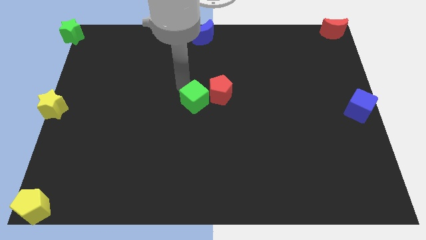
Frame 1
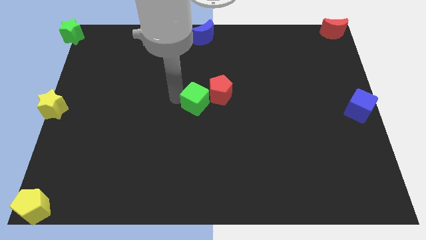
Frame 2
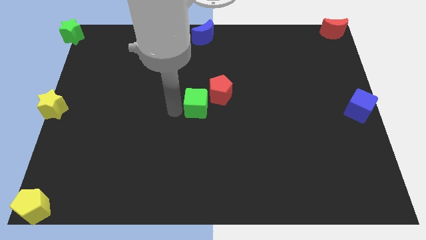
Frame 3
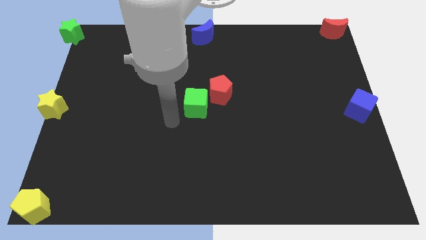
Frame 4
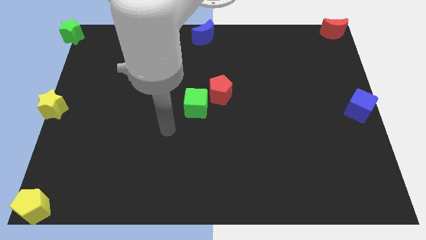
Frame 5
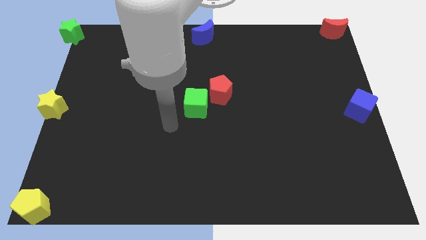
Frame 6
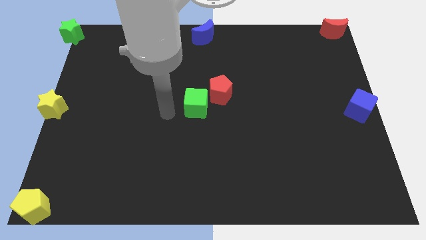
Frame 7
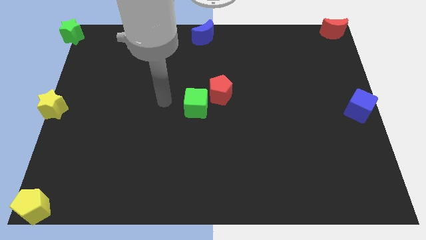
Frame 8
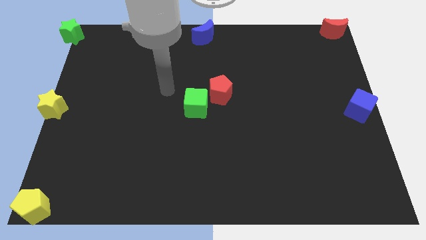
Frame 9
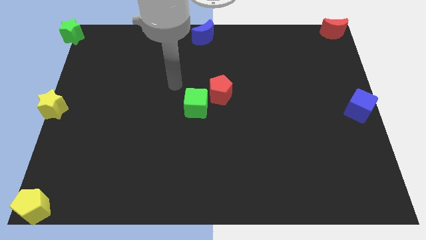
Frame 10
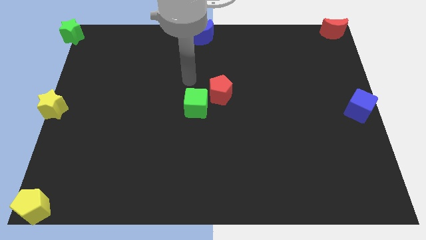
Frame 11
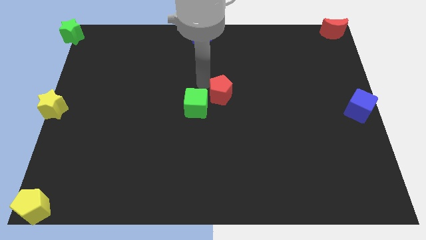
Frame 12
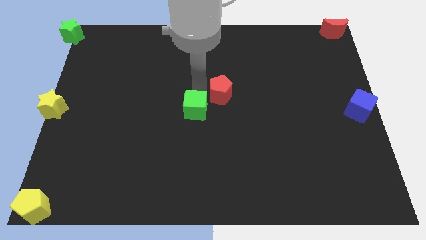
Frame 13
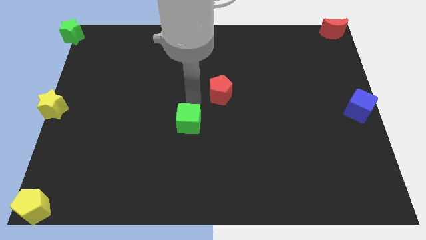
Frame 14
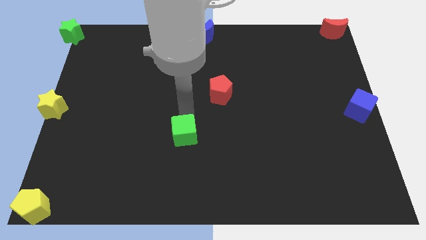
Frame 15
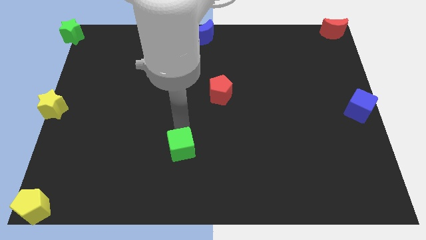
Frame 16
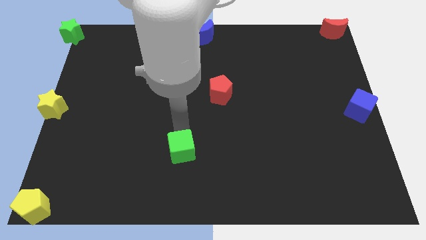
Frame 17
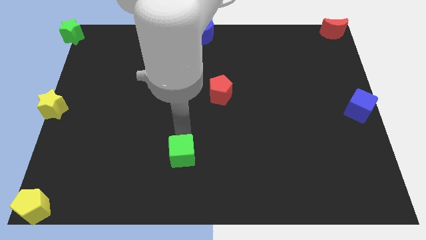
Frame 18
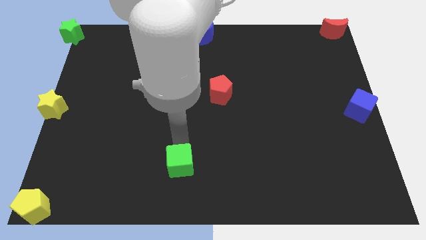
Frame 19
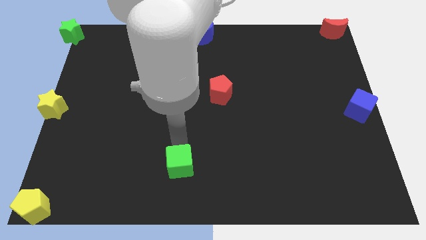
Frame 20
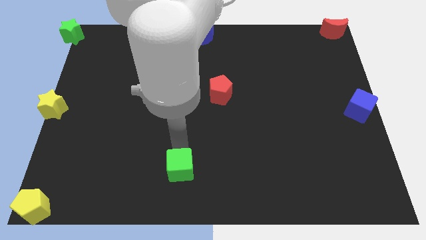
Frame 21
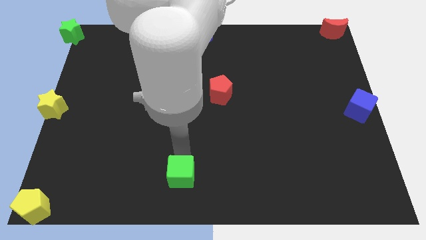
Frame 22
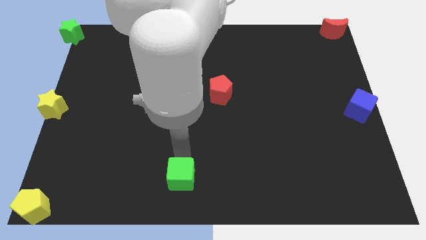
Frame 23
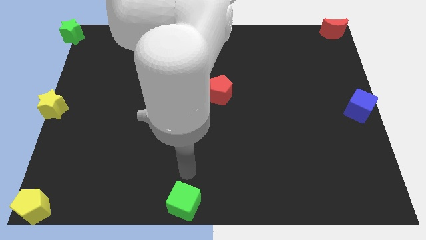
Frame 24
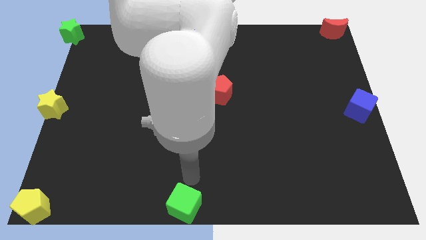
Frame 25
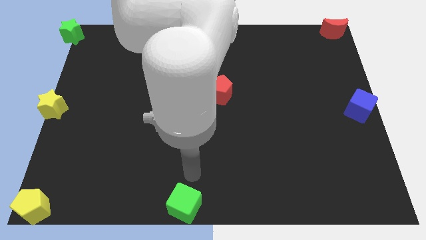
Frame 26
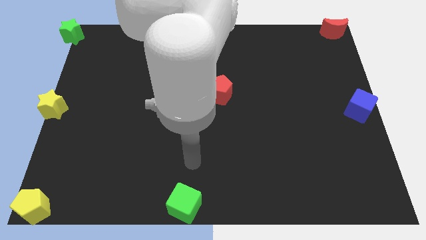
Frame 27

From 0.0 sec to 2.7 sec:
push the green cube to the bottom center

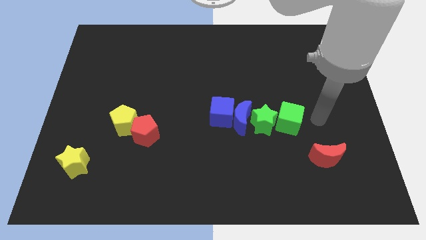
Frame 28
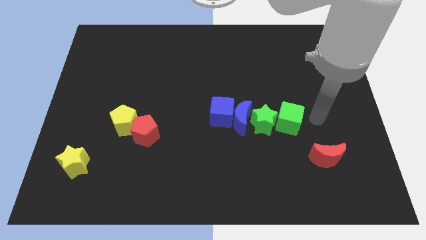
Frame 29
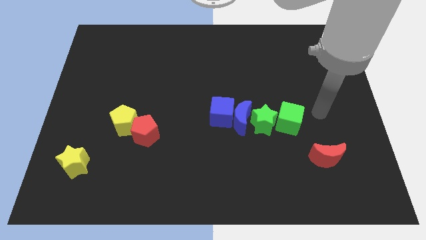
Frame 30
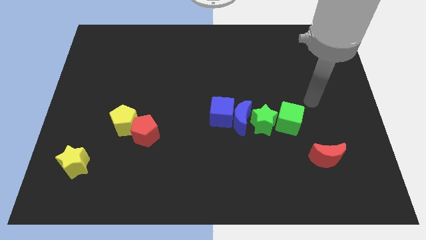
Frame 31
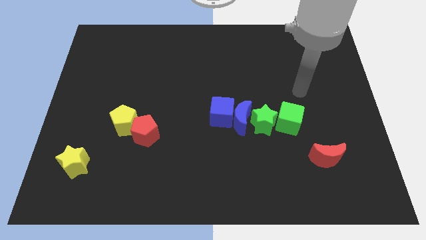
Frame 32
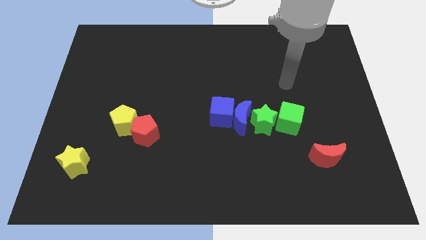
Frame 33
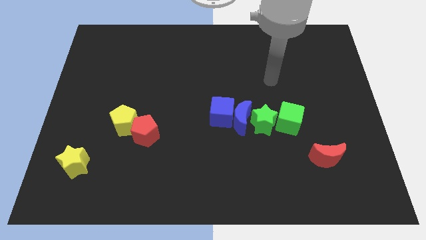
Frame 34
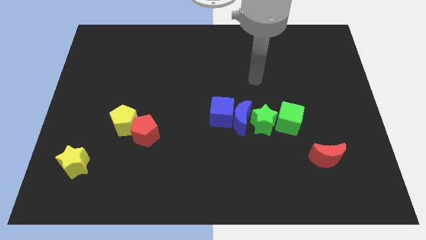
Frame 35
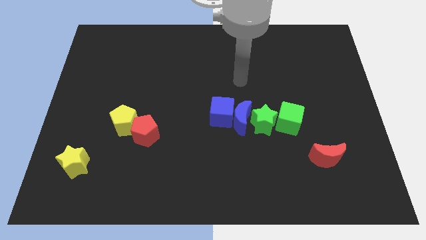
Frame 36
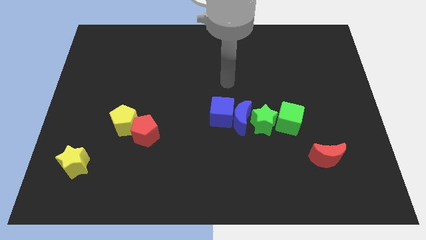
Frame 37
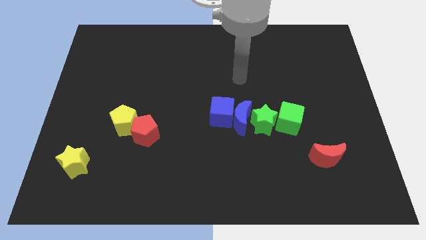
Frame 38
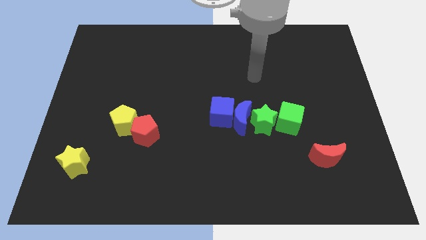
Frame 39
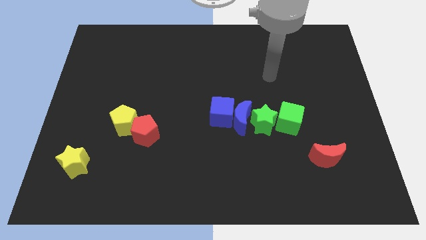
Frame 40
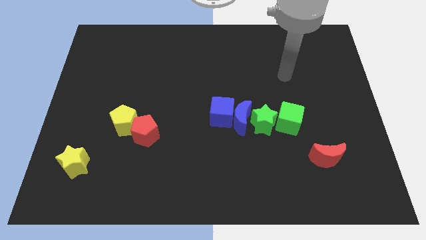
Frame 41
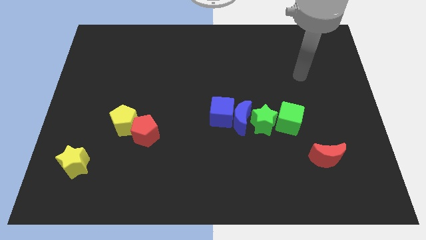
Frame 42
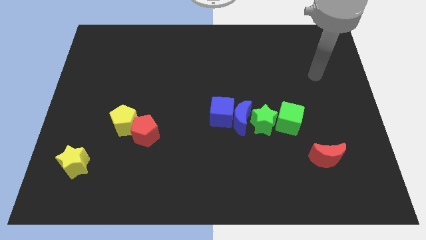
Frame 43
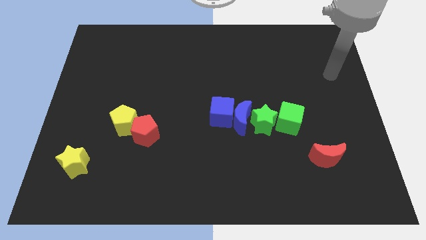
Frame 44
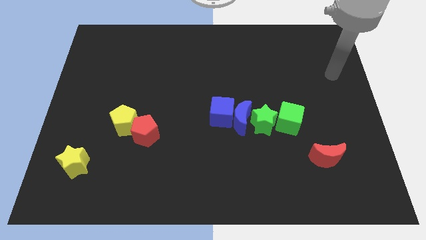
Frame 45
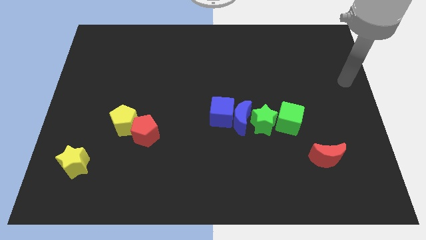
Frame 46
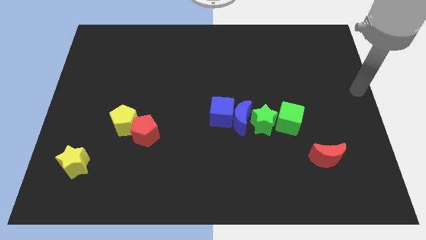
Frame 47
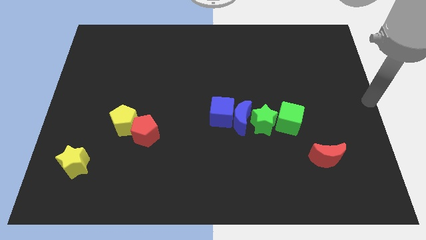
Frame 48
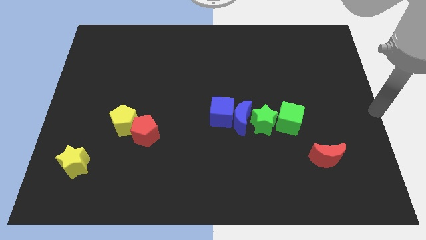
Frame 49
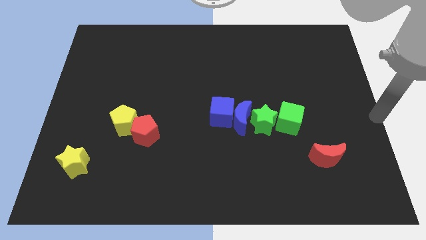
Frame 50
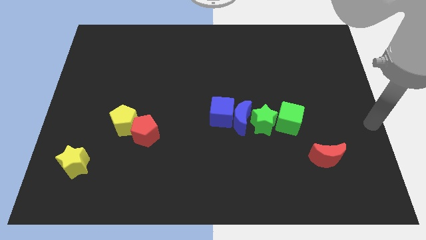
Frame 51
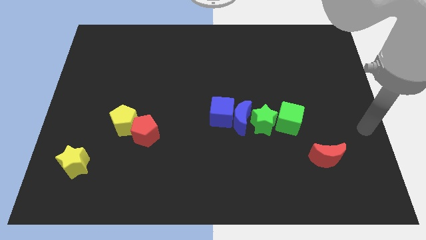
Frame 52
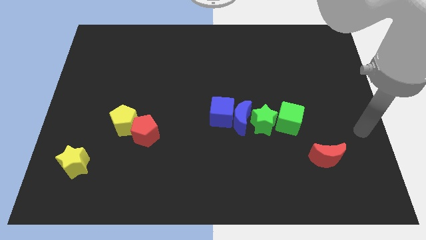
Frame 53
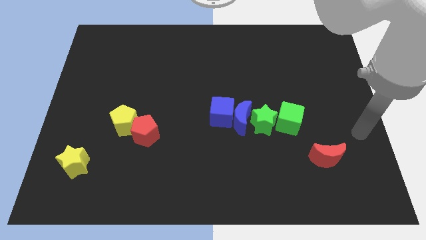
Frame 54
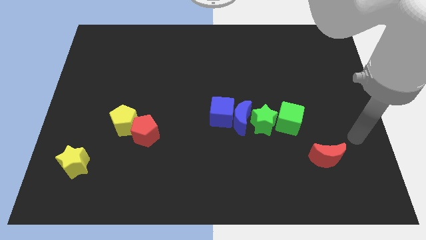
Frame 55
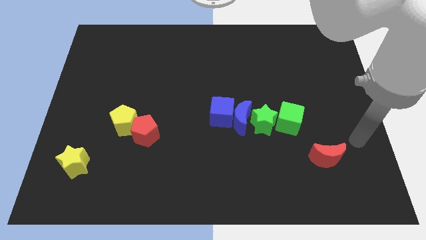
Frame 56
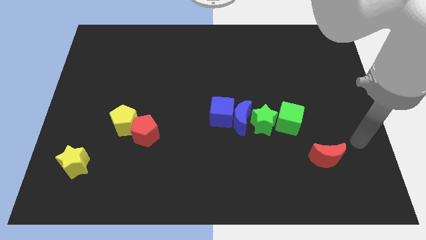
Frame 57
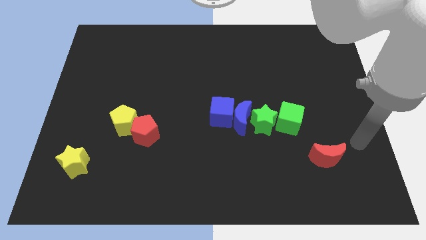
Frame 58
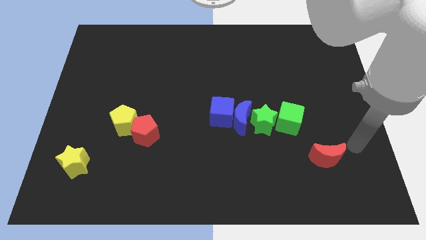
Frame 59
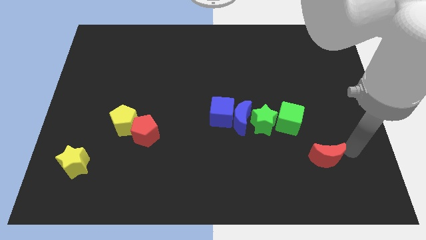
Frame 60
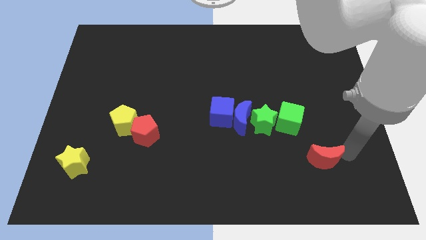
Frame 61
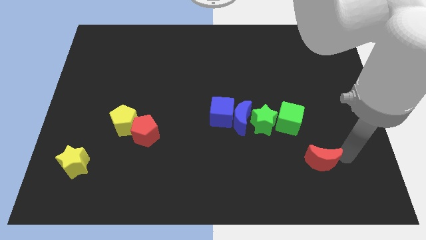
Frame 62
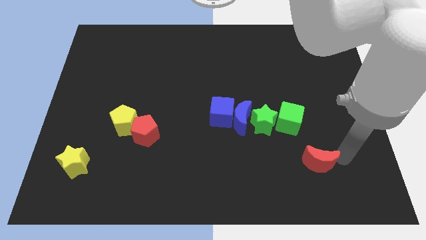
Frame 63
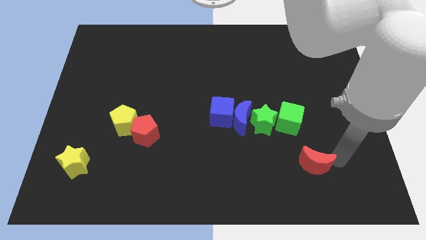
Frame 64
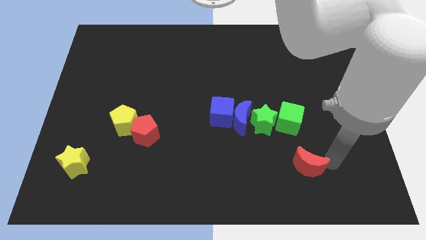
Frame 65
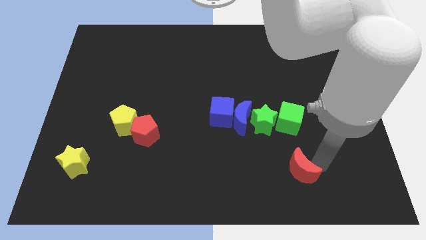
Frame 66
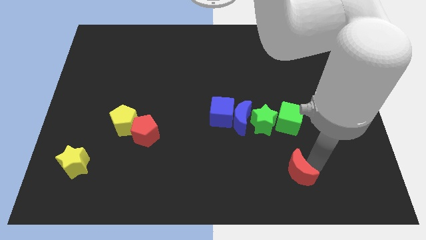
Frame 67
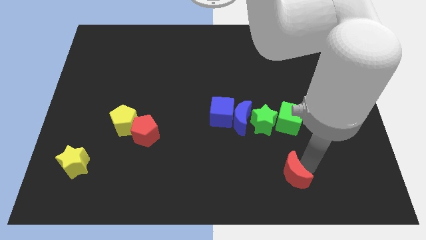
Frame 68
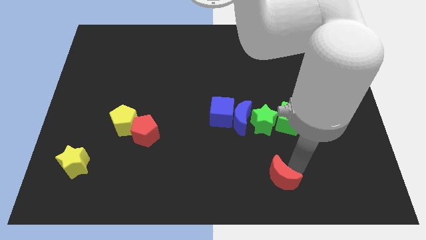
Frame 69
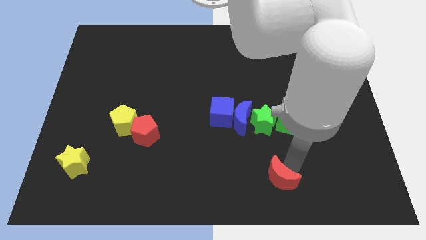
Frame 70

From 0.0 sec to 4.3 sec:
place the red moon to the bottom side of the green cube

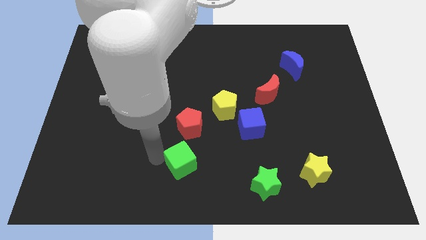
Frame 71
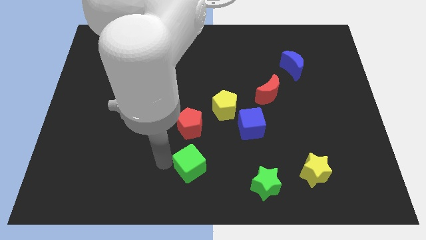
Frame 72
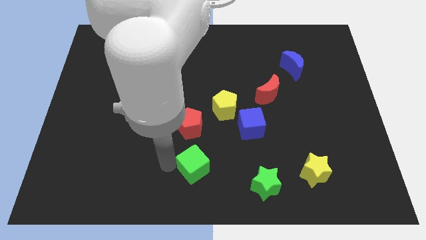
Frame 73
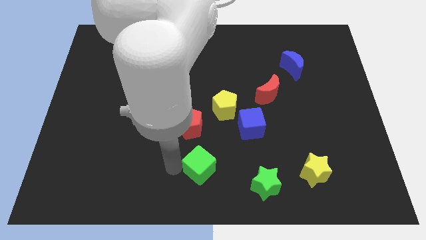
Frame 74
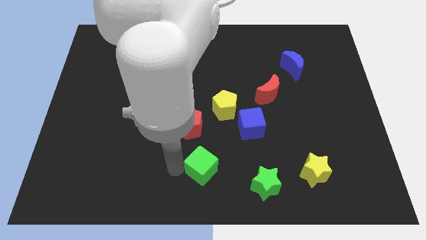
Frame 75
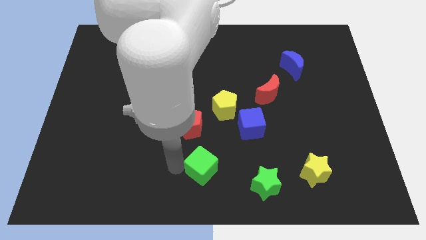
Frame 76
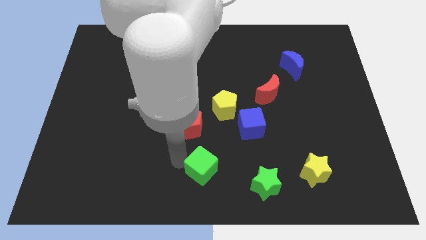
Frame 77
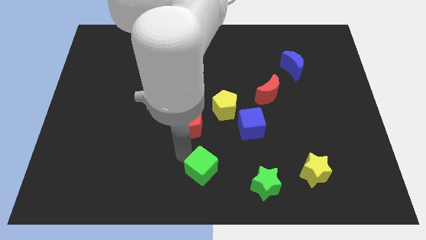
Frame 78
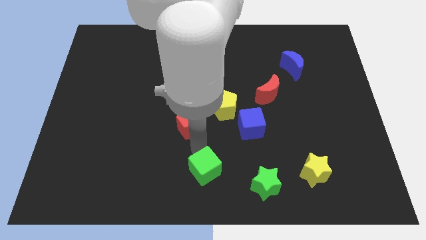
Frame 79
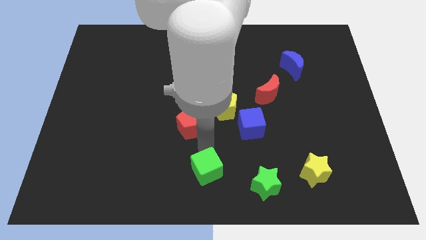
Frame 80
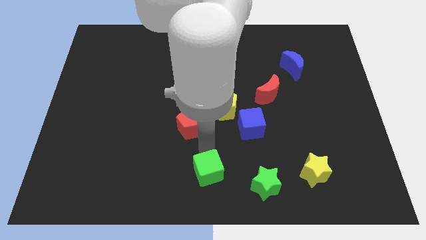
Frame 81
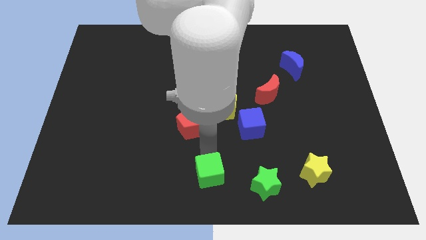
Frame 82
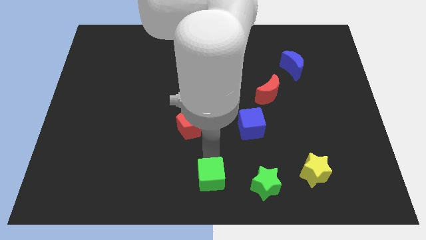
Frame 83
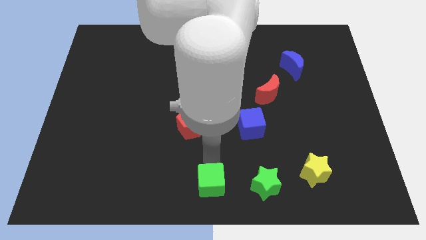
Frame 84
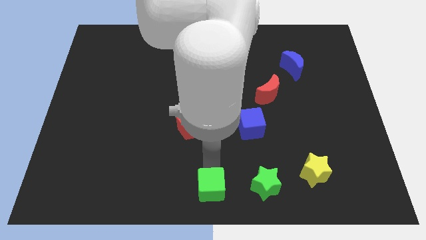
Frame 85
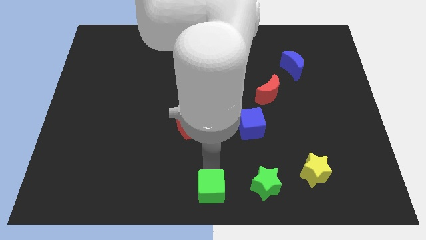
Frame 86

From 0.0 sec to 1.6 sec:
place the green cube left to the green star

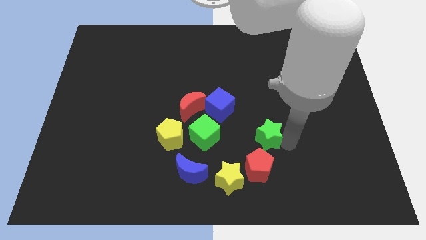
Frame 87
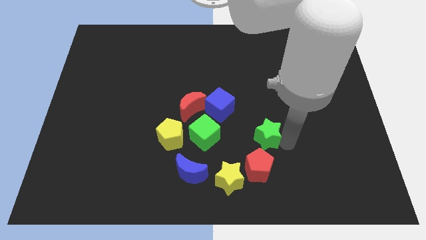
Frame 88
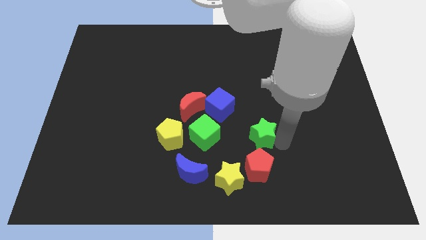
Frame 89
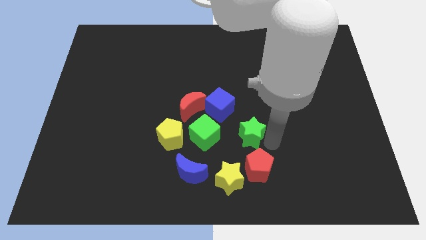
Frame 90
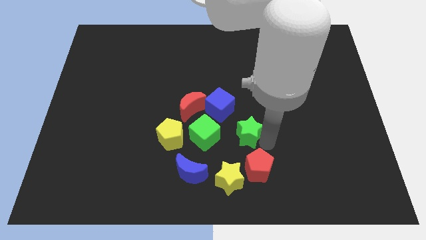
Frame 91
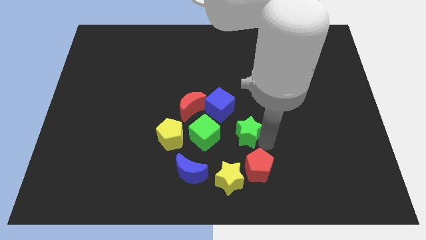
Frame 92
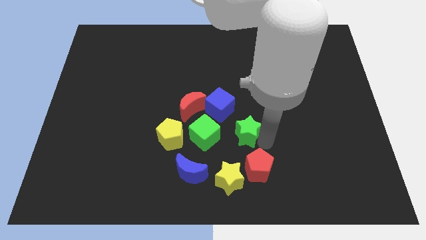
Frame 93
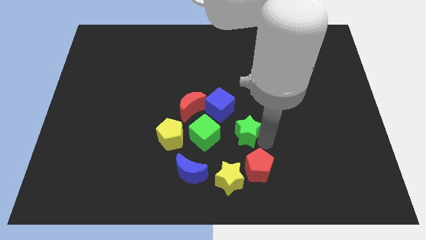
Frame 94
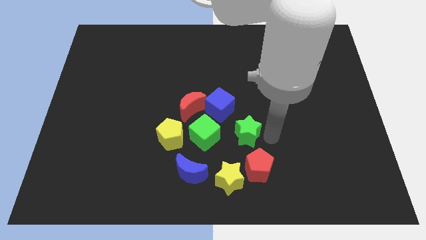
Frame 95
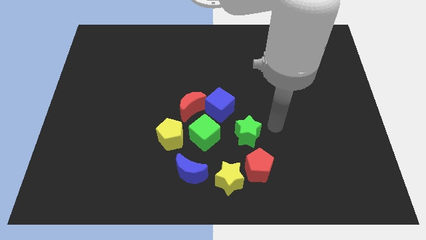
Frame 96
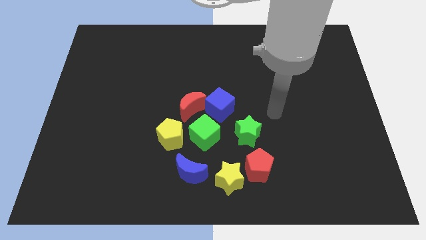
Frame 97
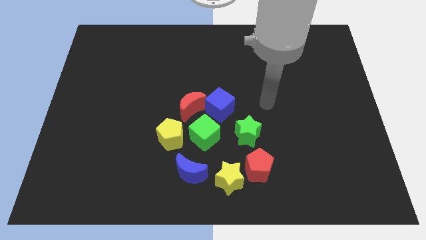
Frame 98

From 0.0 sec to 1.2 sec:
slightly push the green star
